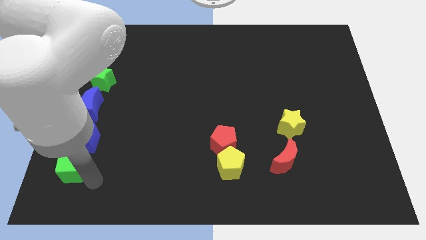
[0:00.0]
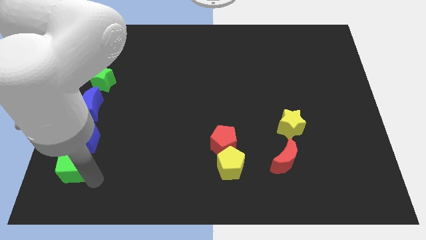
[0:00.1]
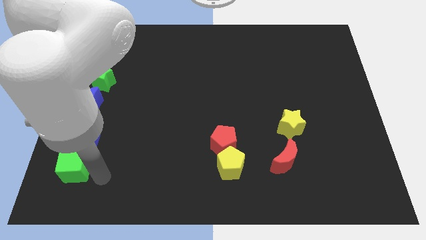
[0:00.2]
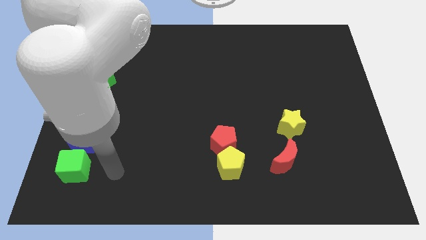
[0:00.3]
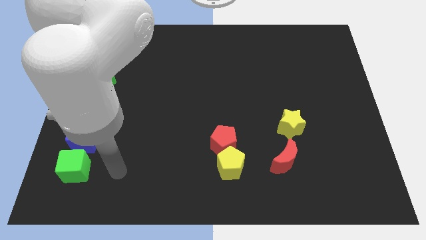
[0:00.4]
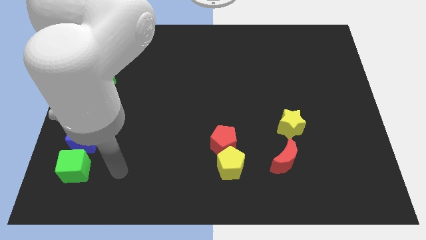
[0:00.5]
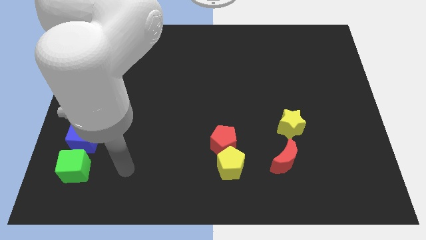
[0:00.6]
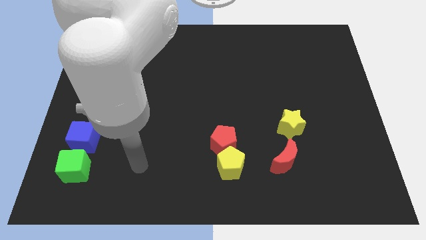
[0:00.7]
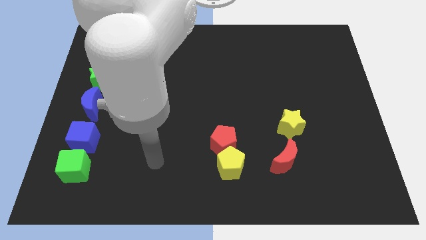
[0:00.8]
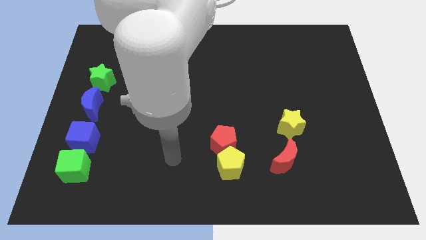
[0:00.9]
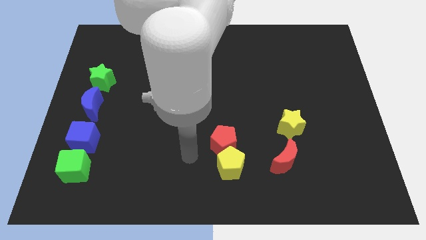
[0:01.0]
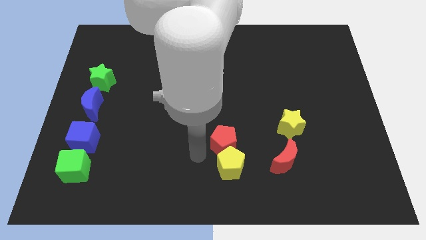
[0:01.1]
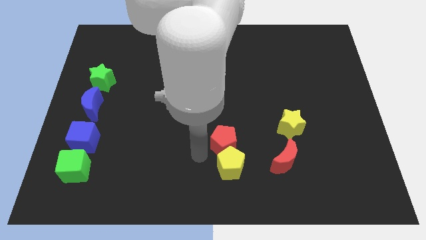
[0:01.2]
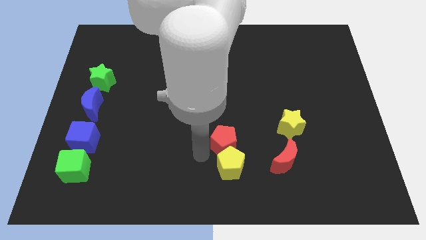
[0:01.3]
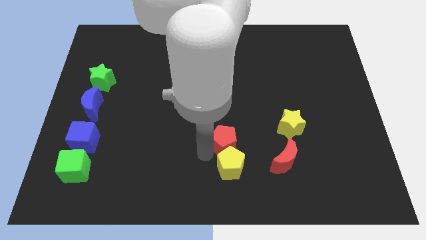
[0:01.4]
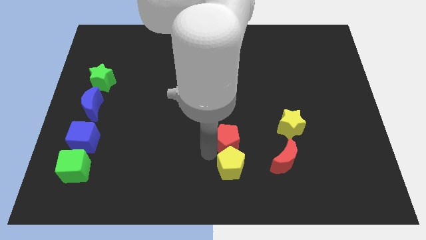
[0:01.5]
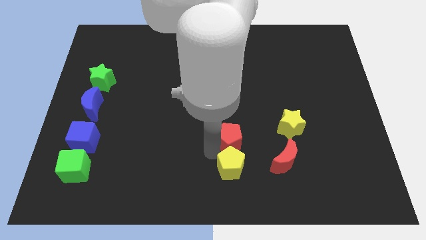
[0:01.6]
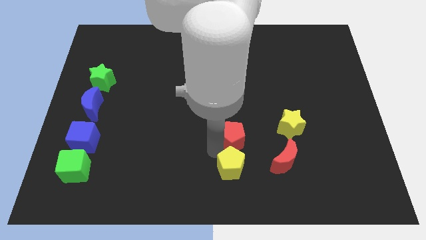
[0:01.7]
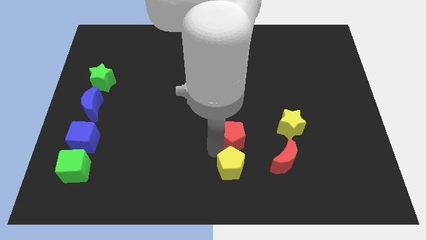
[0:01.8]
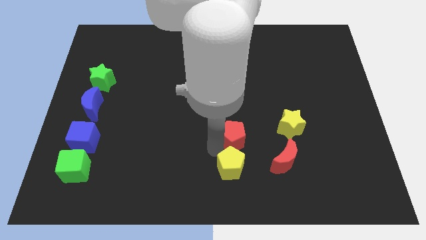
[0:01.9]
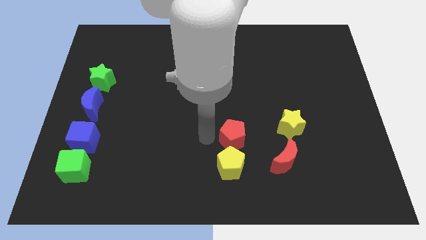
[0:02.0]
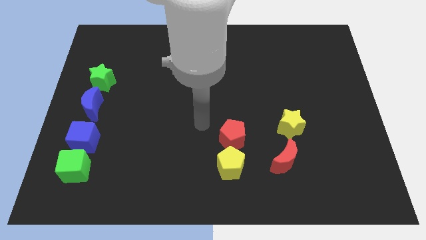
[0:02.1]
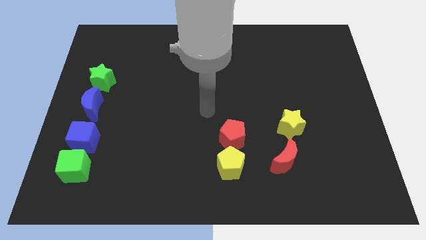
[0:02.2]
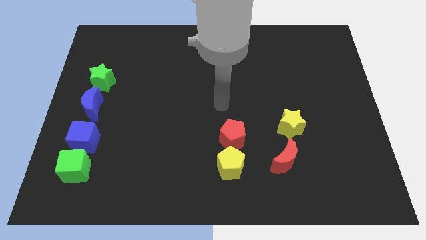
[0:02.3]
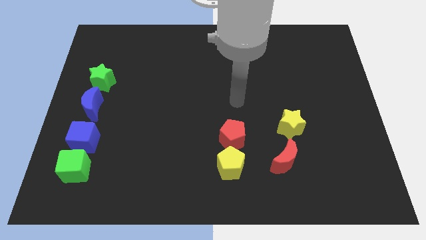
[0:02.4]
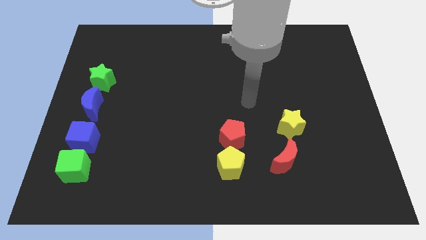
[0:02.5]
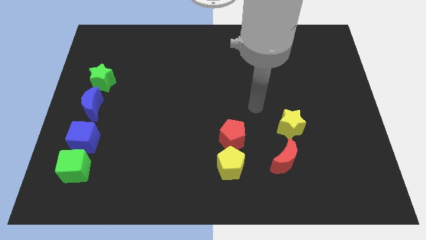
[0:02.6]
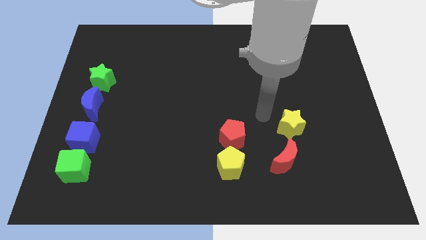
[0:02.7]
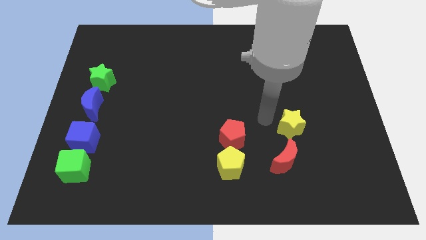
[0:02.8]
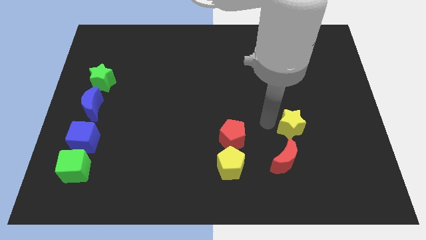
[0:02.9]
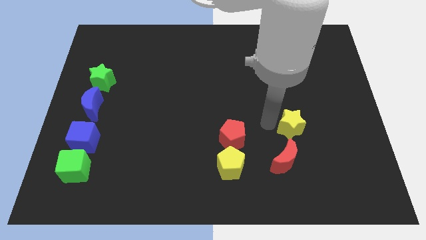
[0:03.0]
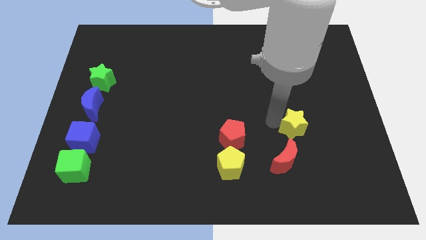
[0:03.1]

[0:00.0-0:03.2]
touch the red pentagon with your arm

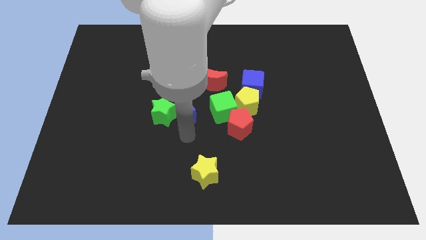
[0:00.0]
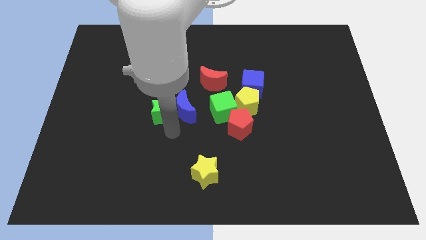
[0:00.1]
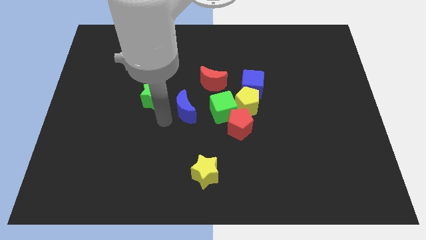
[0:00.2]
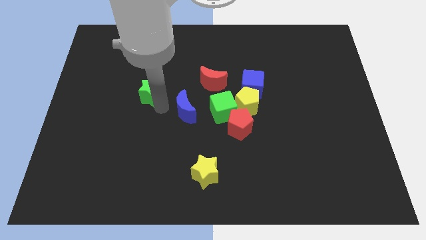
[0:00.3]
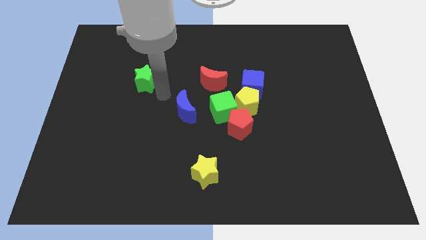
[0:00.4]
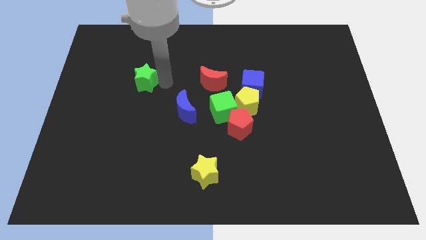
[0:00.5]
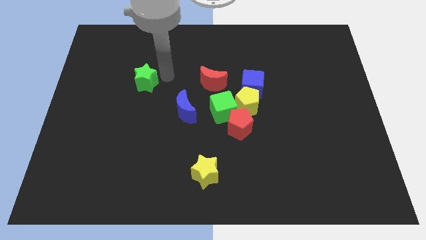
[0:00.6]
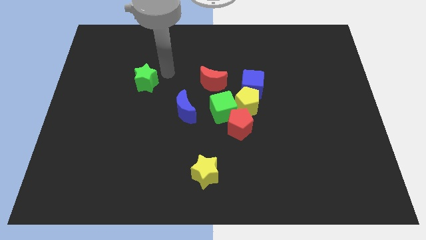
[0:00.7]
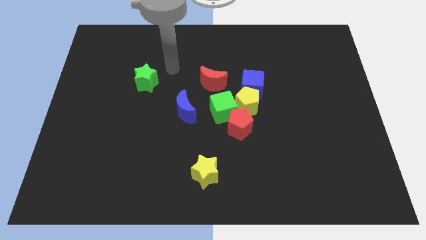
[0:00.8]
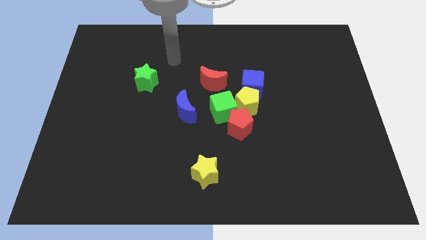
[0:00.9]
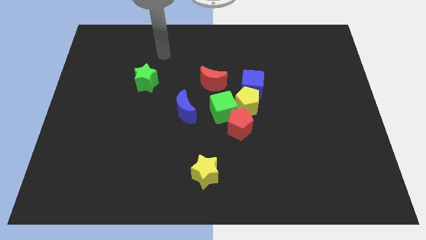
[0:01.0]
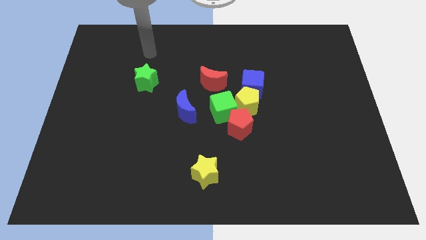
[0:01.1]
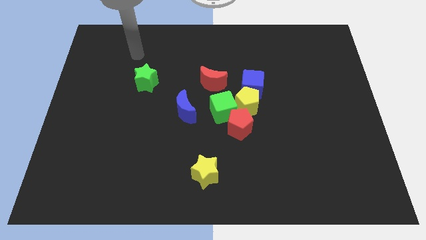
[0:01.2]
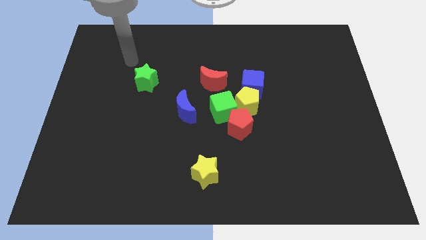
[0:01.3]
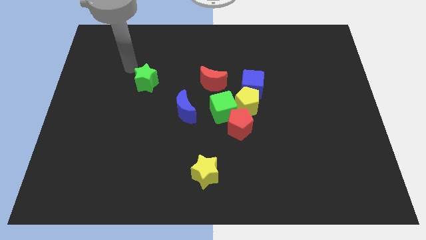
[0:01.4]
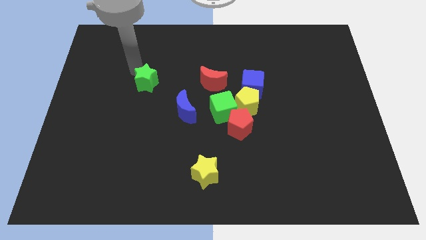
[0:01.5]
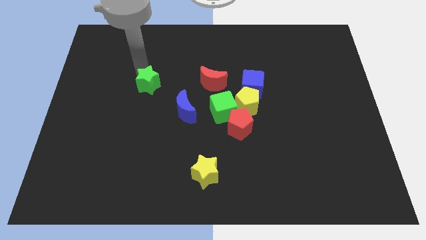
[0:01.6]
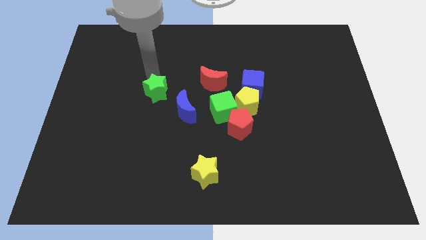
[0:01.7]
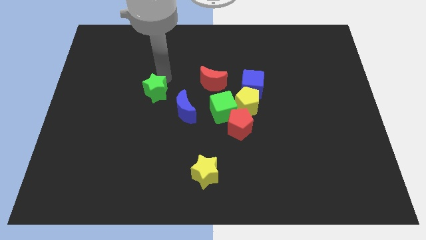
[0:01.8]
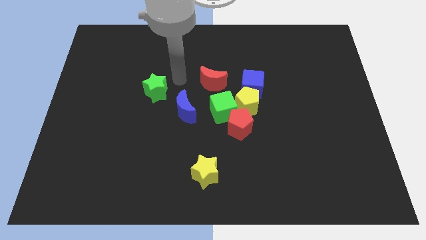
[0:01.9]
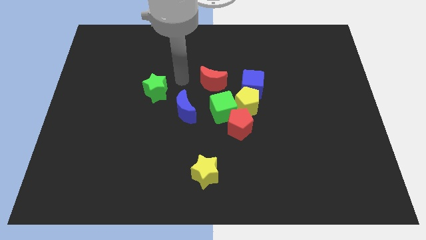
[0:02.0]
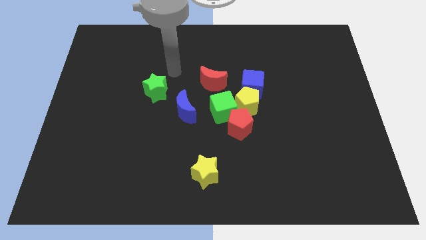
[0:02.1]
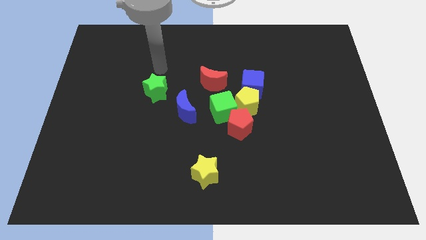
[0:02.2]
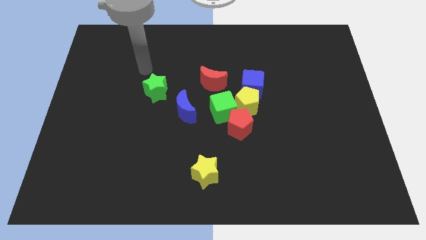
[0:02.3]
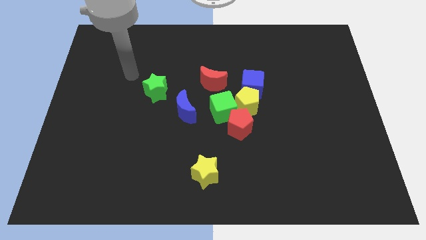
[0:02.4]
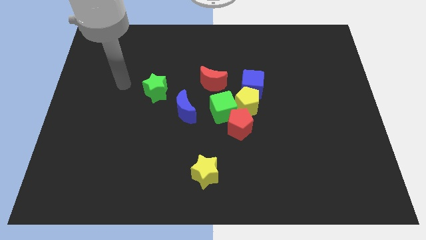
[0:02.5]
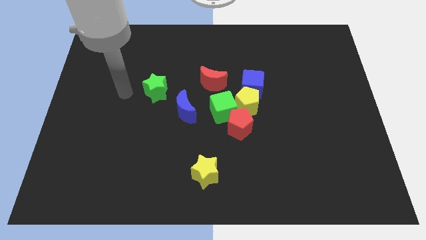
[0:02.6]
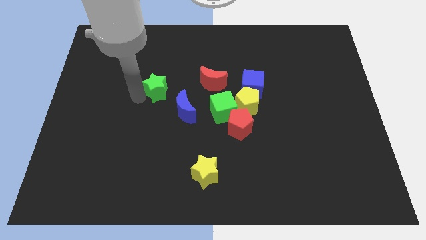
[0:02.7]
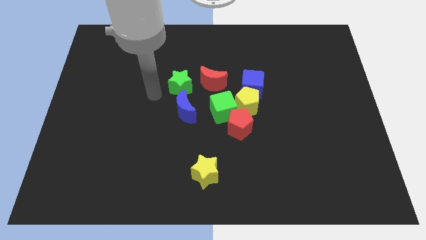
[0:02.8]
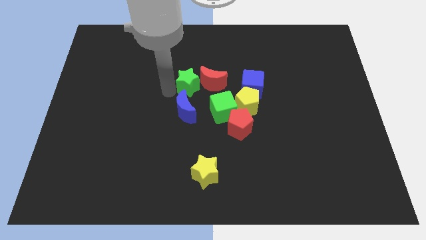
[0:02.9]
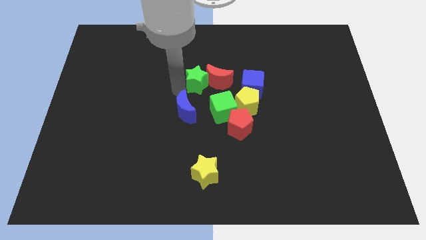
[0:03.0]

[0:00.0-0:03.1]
place green star above the blue moon

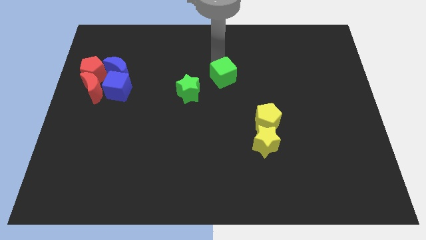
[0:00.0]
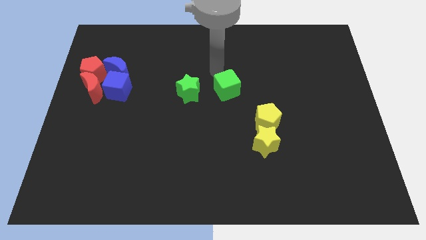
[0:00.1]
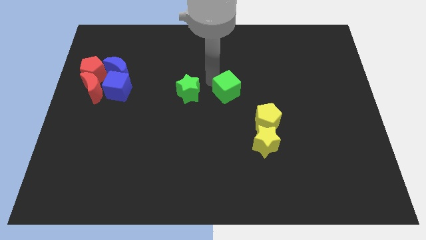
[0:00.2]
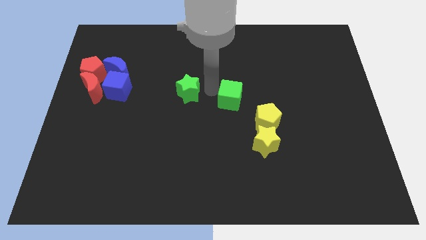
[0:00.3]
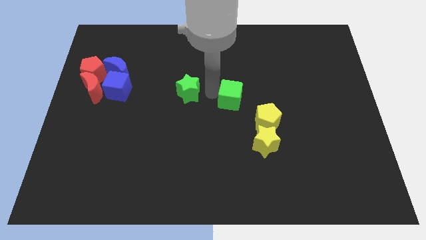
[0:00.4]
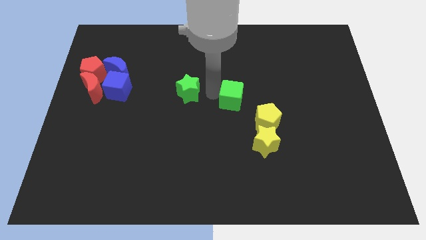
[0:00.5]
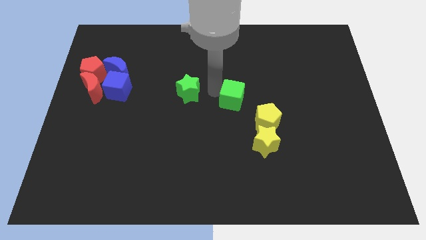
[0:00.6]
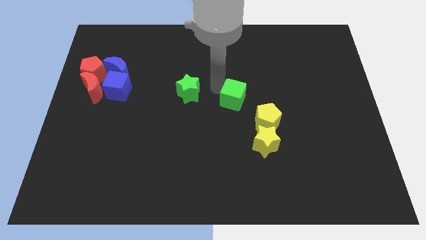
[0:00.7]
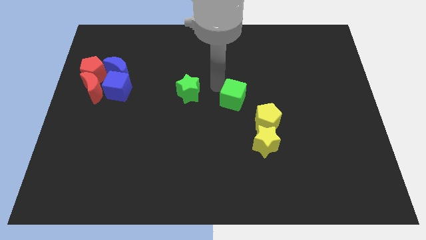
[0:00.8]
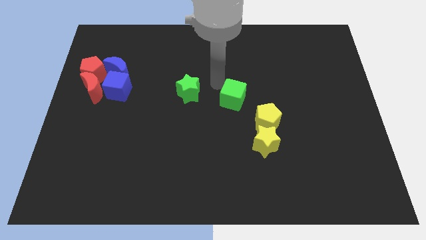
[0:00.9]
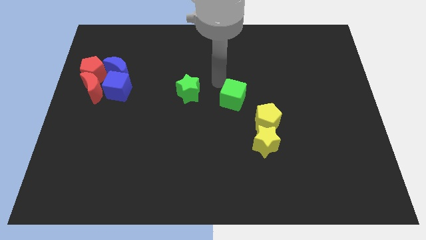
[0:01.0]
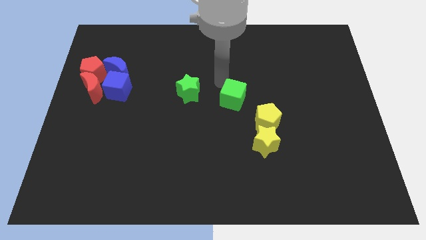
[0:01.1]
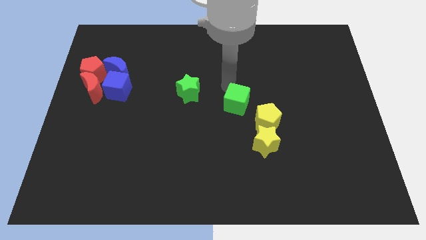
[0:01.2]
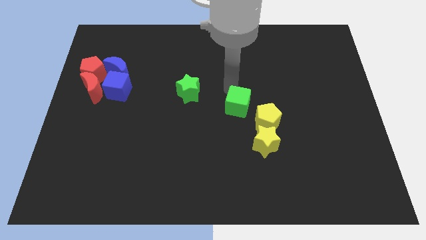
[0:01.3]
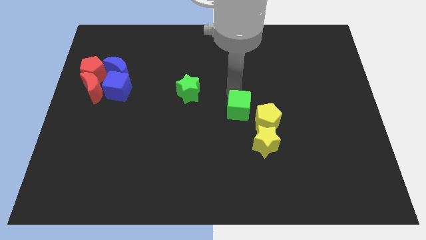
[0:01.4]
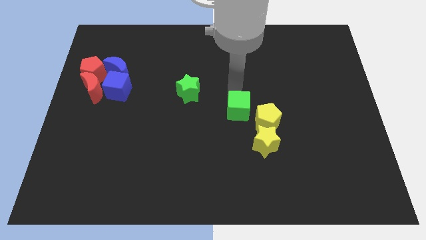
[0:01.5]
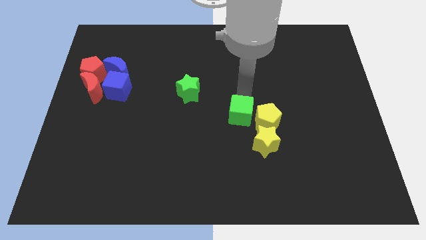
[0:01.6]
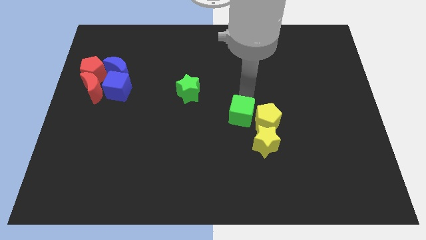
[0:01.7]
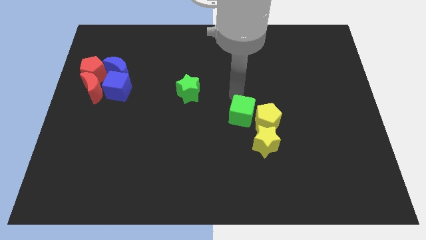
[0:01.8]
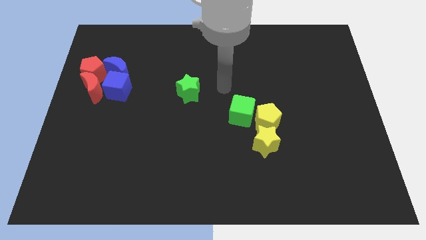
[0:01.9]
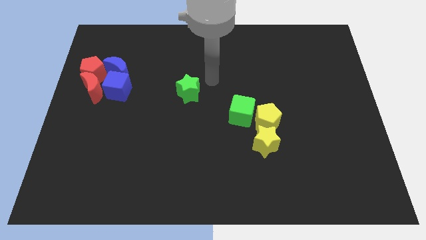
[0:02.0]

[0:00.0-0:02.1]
move the green cube left to the yellow pentagon

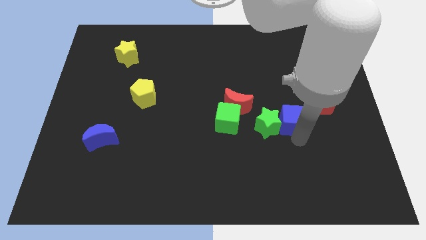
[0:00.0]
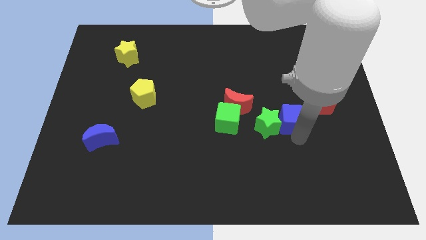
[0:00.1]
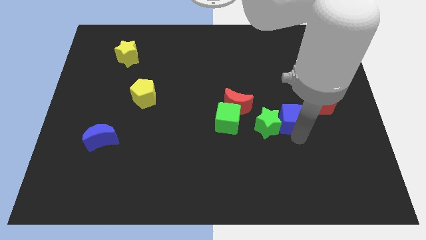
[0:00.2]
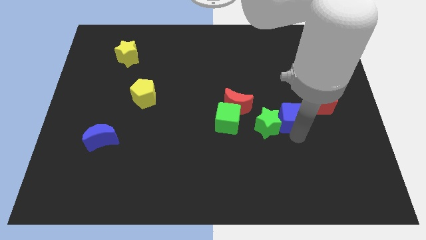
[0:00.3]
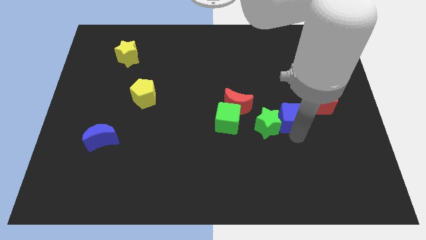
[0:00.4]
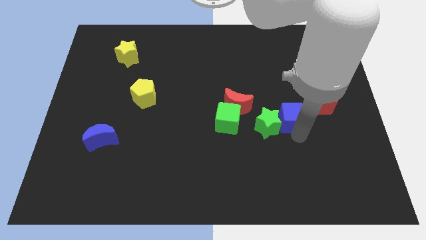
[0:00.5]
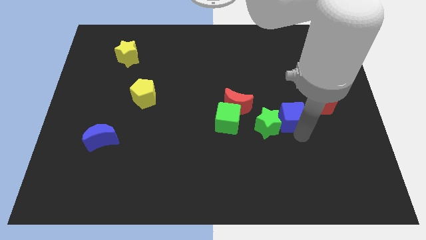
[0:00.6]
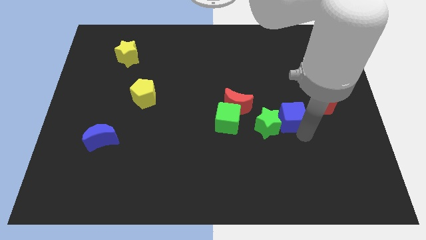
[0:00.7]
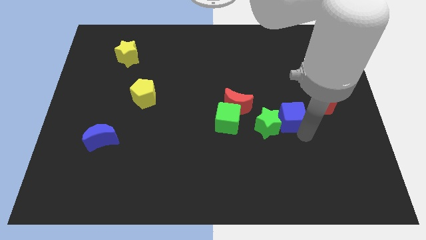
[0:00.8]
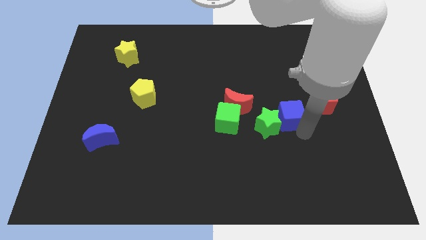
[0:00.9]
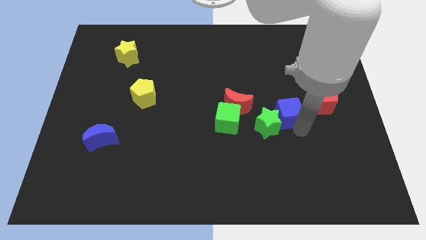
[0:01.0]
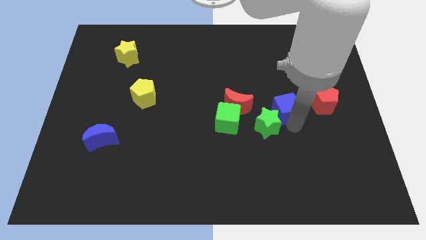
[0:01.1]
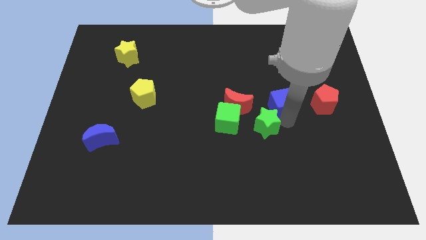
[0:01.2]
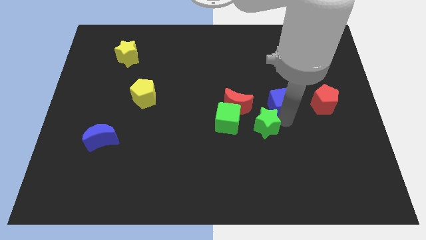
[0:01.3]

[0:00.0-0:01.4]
place the blue cube left to the red pentagon
